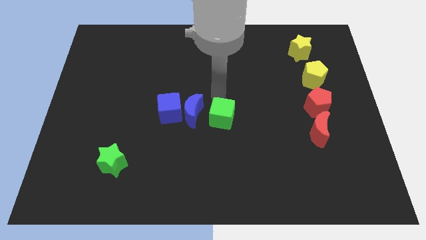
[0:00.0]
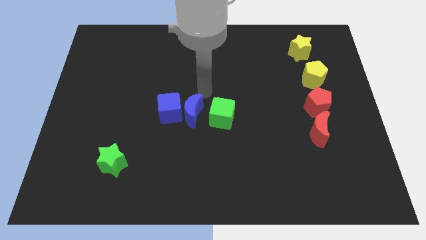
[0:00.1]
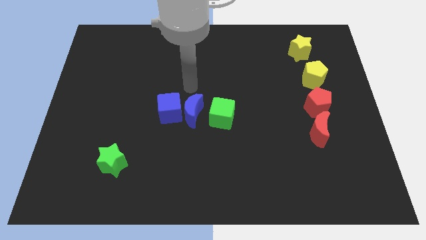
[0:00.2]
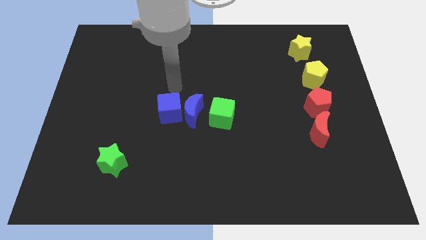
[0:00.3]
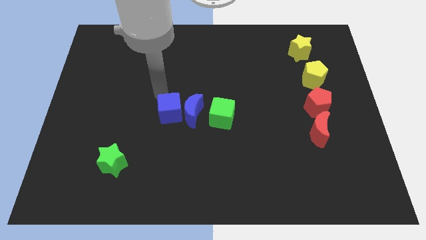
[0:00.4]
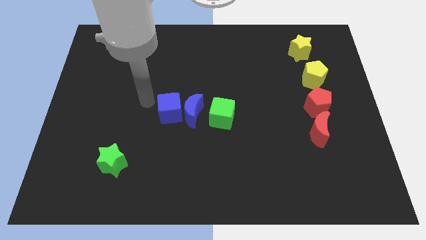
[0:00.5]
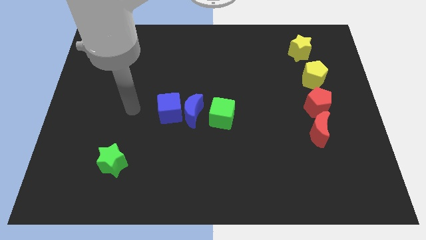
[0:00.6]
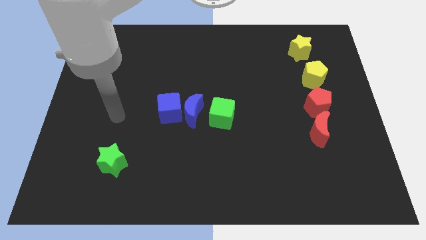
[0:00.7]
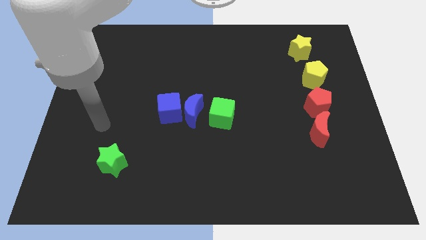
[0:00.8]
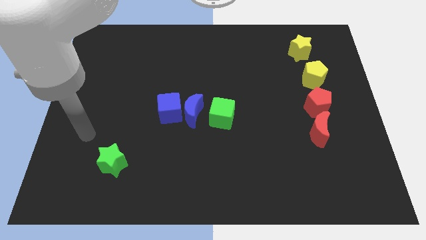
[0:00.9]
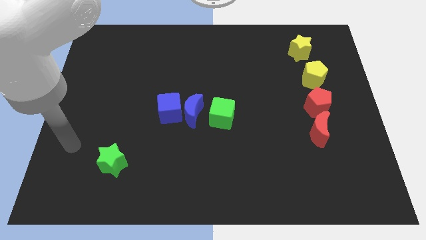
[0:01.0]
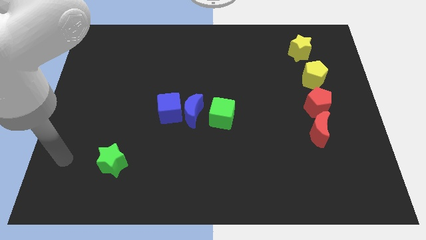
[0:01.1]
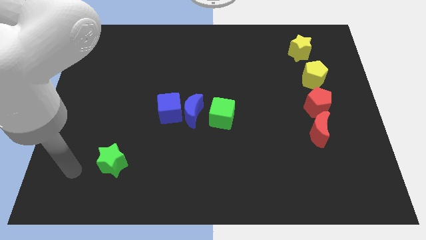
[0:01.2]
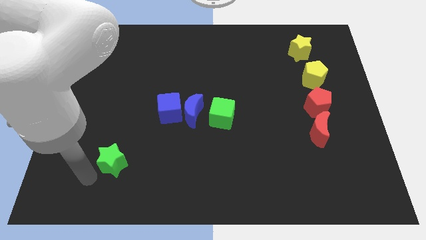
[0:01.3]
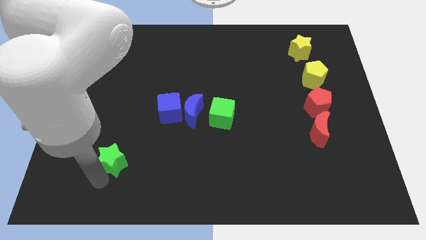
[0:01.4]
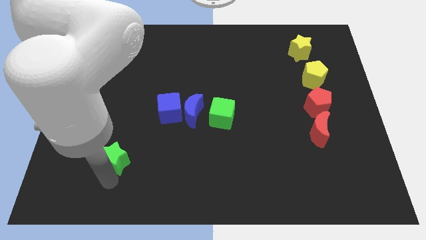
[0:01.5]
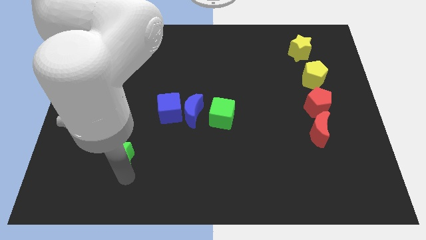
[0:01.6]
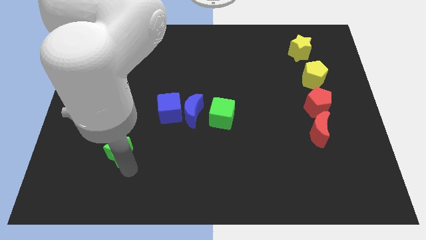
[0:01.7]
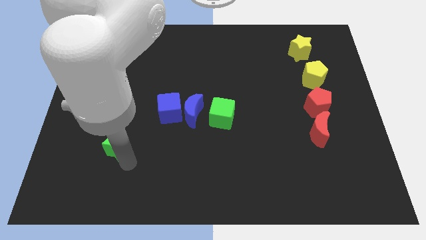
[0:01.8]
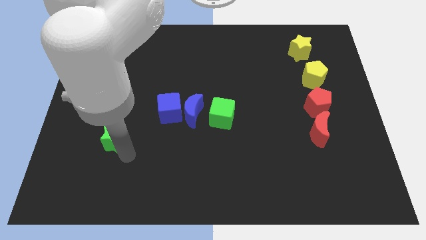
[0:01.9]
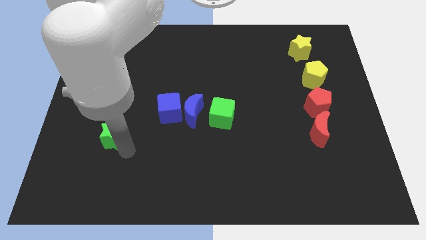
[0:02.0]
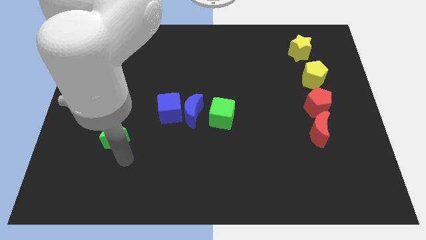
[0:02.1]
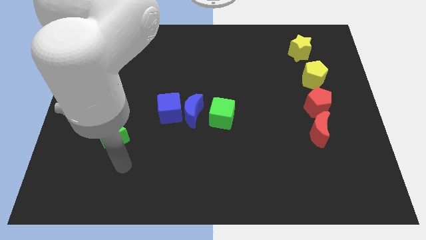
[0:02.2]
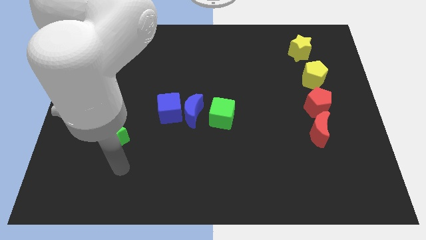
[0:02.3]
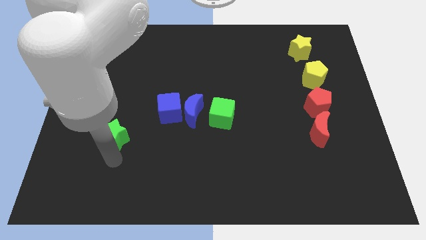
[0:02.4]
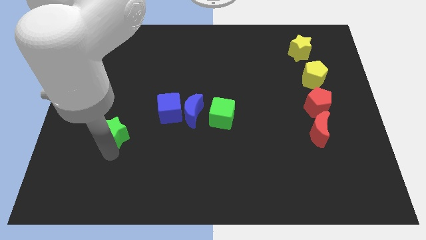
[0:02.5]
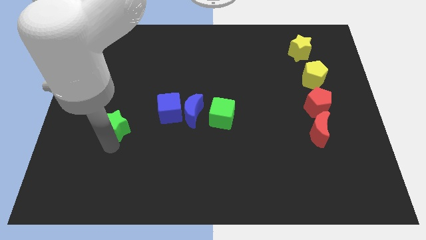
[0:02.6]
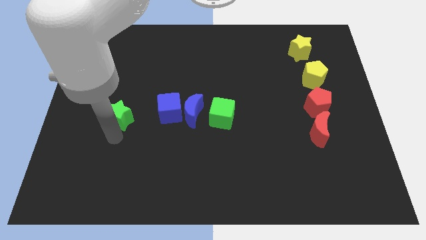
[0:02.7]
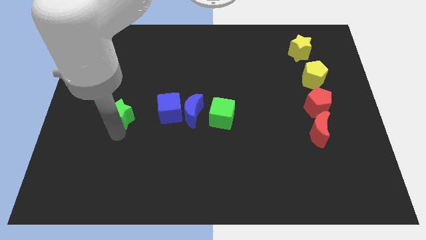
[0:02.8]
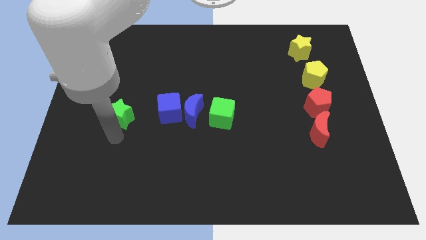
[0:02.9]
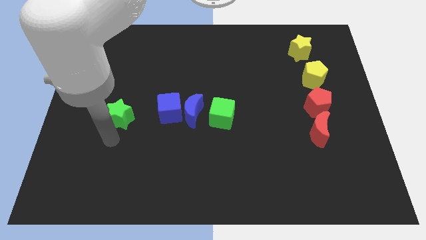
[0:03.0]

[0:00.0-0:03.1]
place the green star left to the blue cube

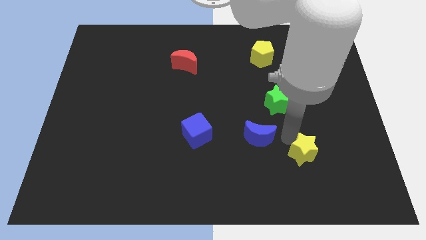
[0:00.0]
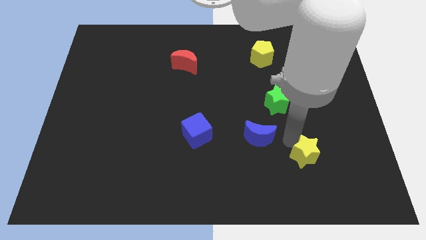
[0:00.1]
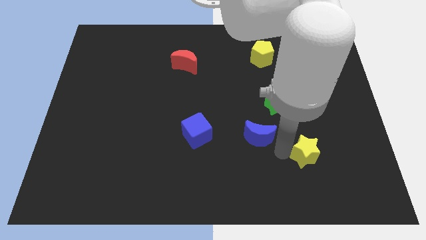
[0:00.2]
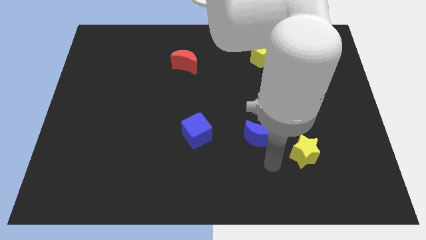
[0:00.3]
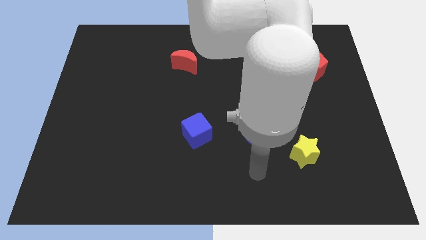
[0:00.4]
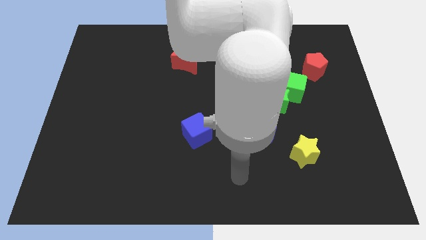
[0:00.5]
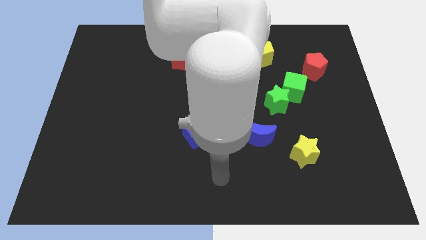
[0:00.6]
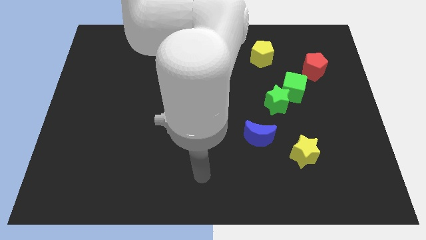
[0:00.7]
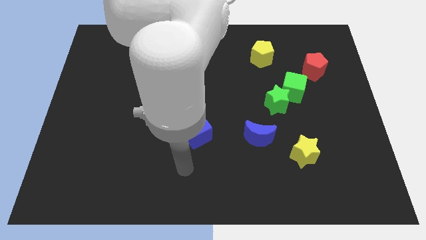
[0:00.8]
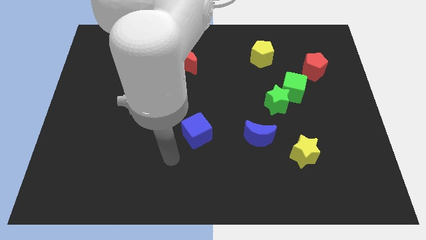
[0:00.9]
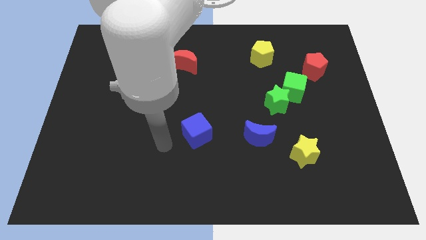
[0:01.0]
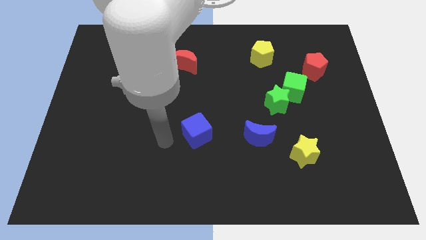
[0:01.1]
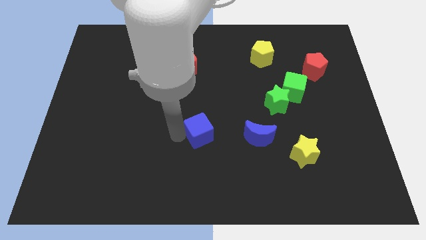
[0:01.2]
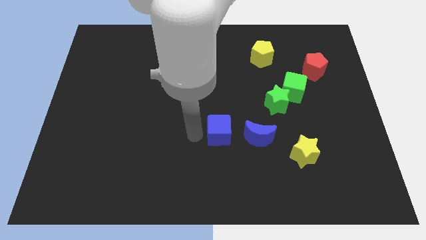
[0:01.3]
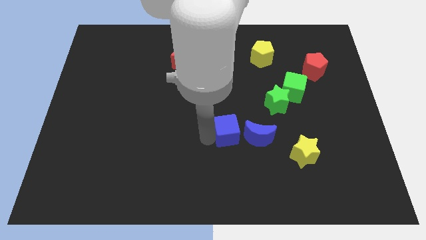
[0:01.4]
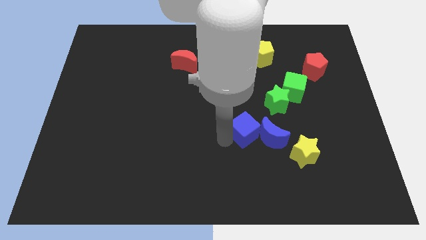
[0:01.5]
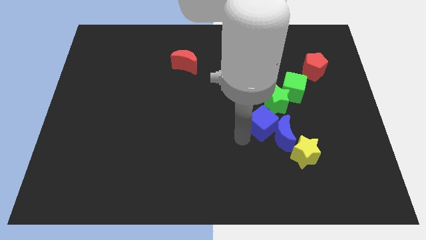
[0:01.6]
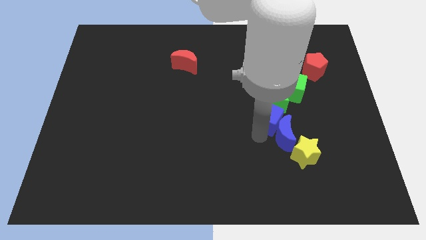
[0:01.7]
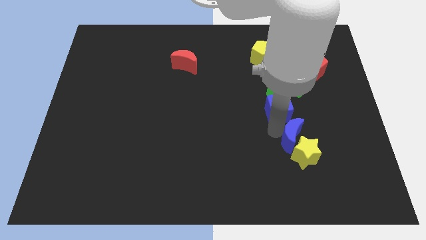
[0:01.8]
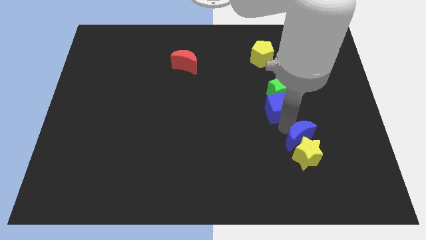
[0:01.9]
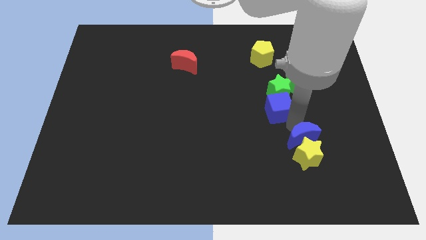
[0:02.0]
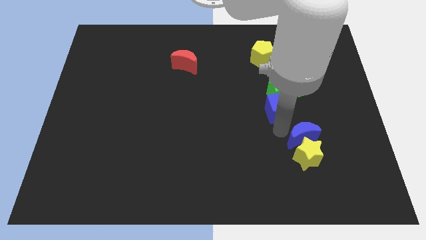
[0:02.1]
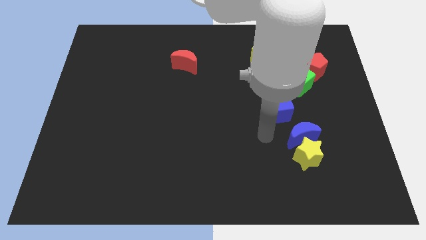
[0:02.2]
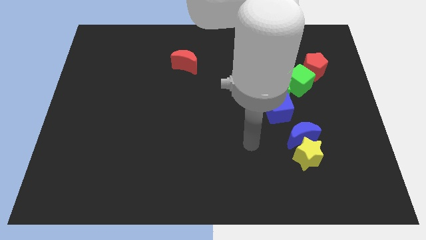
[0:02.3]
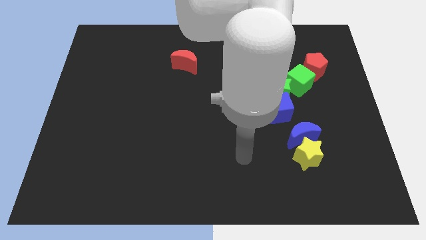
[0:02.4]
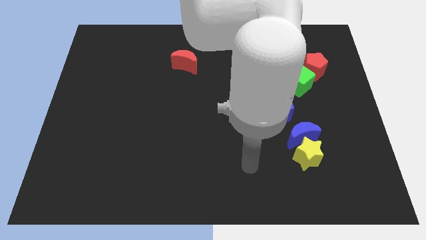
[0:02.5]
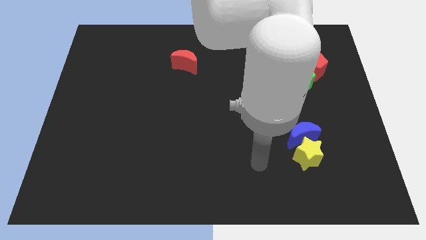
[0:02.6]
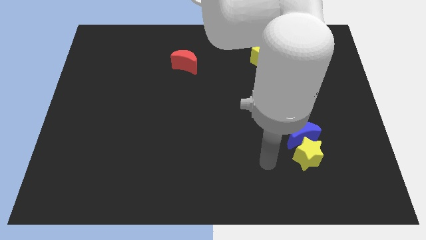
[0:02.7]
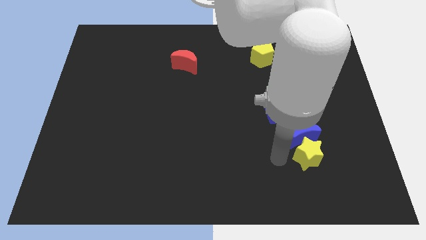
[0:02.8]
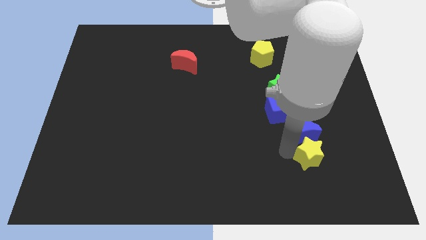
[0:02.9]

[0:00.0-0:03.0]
push the blue blocks towards the right side of the board

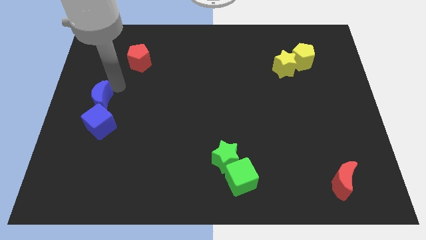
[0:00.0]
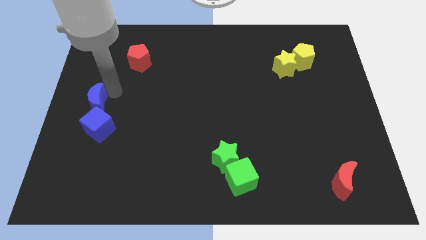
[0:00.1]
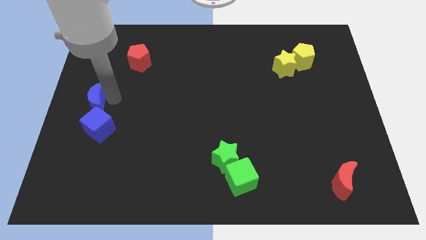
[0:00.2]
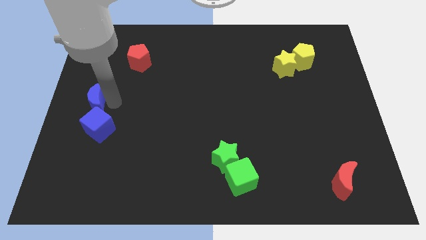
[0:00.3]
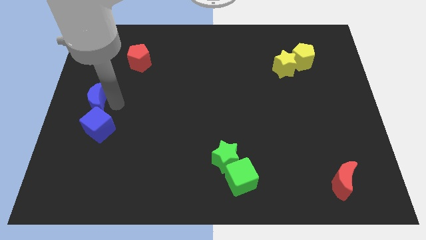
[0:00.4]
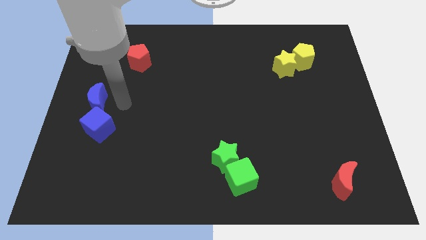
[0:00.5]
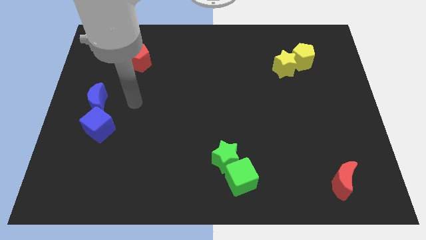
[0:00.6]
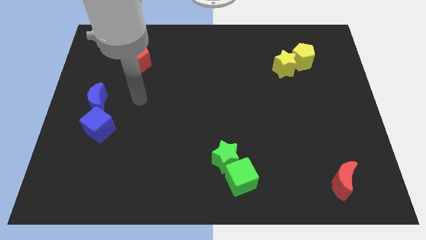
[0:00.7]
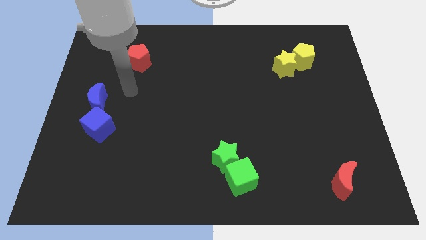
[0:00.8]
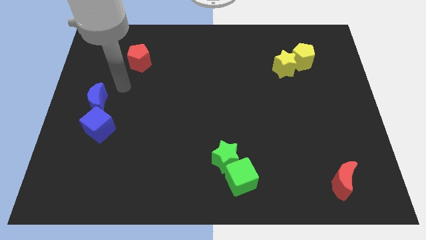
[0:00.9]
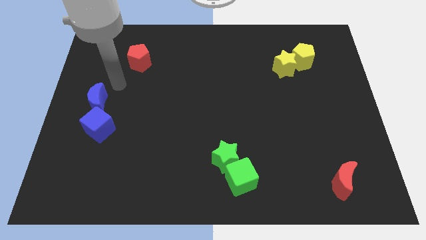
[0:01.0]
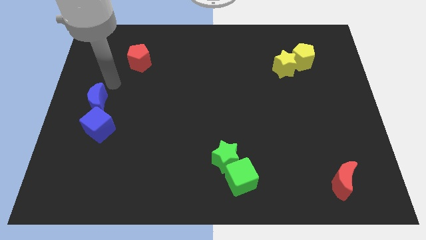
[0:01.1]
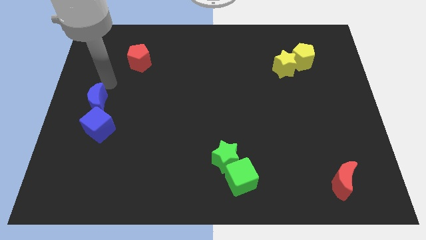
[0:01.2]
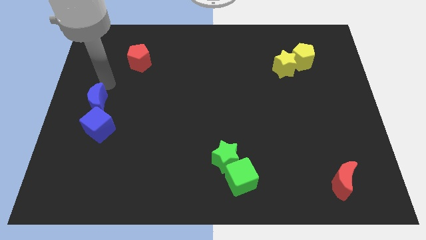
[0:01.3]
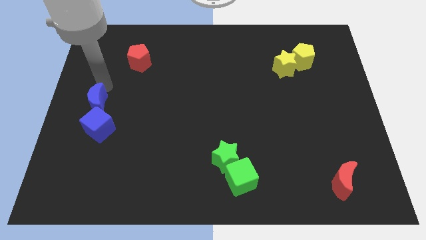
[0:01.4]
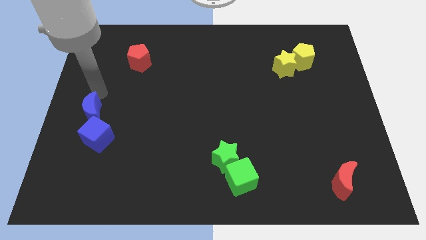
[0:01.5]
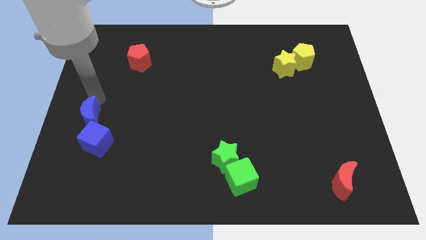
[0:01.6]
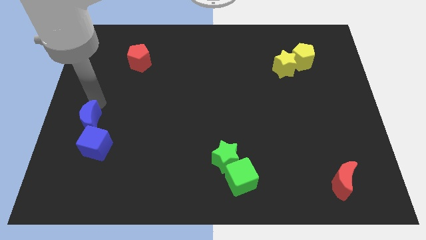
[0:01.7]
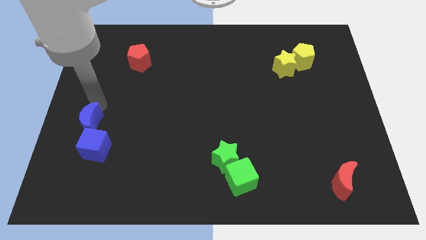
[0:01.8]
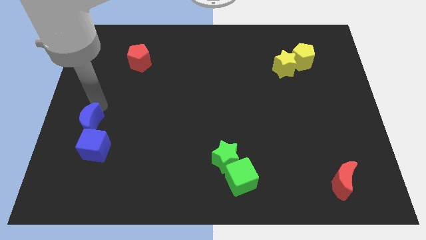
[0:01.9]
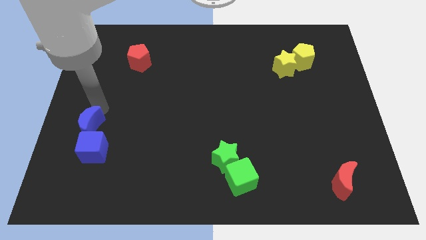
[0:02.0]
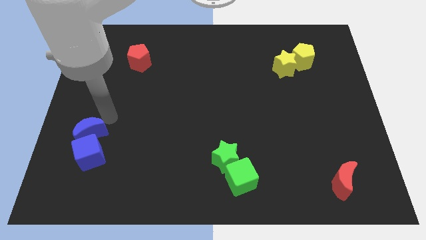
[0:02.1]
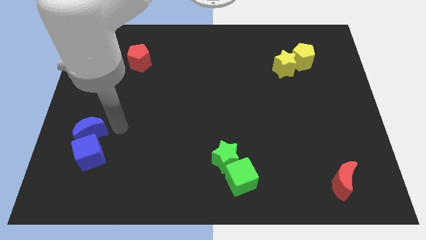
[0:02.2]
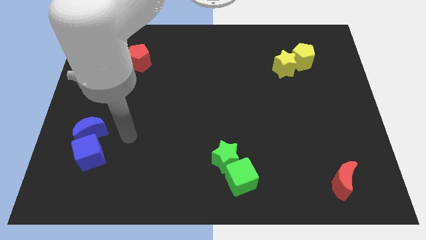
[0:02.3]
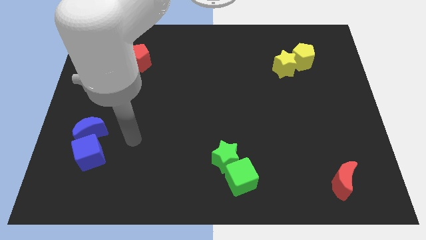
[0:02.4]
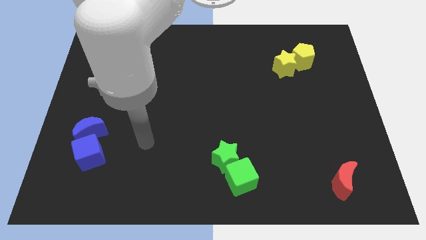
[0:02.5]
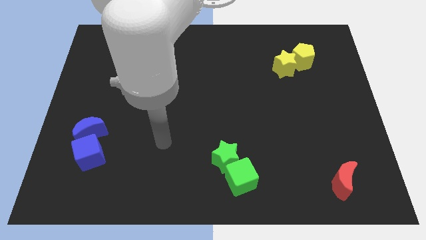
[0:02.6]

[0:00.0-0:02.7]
push the blue blocks towards the bottom left corner

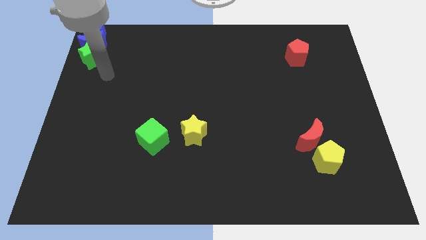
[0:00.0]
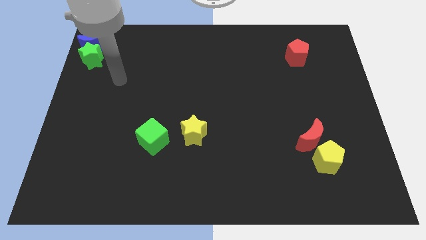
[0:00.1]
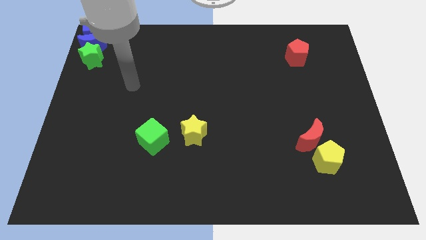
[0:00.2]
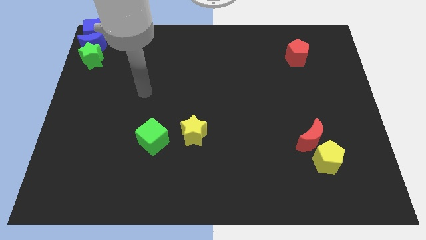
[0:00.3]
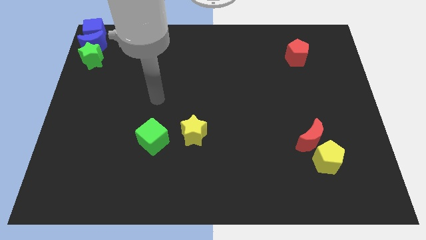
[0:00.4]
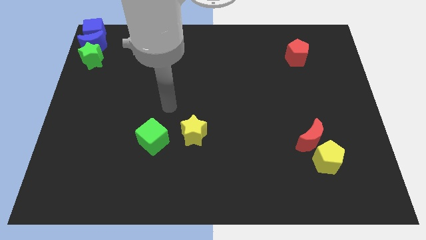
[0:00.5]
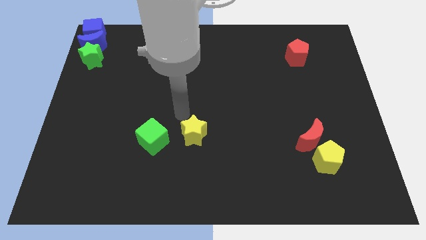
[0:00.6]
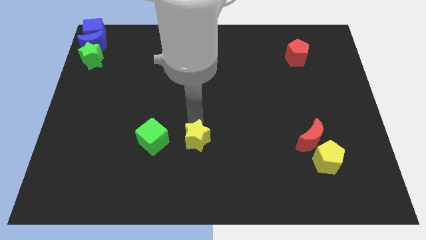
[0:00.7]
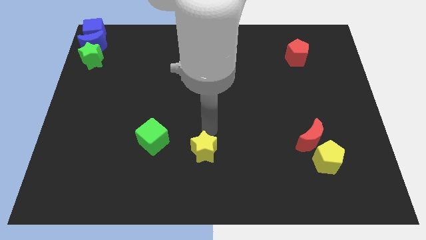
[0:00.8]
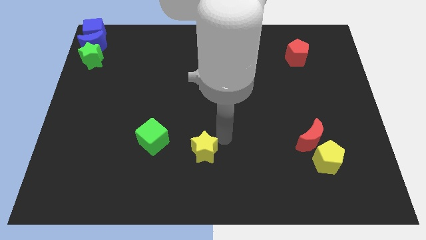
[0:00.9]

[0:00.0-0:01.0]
push the yellow star towards the bottom side of the board
